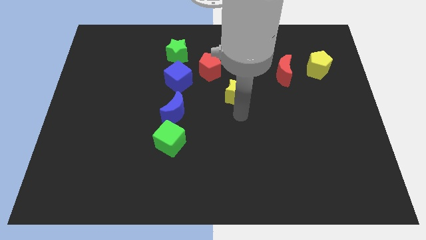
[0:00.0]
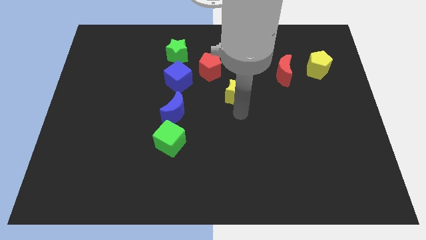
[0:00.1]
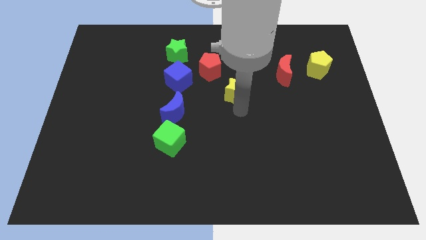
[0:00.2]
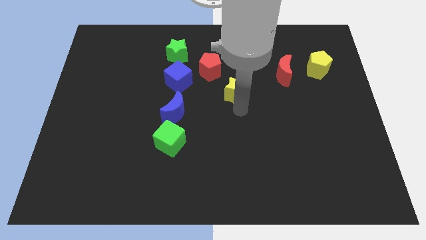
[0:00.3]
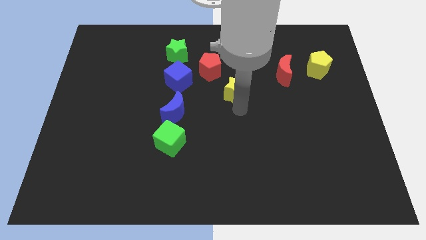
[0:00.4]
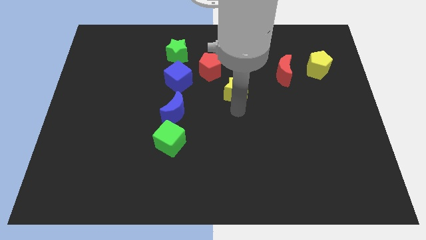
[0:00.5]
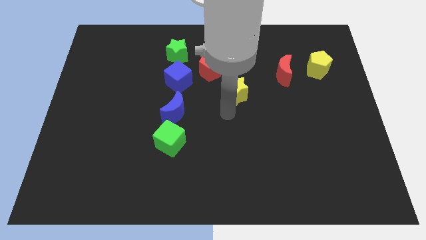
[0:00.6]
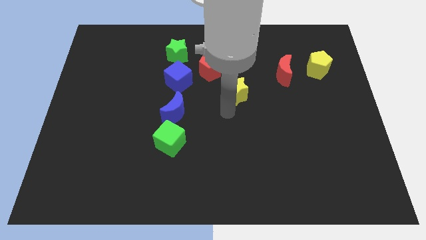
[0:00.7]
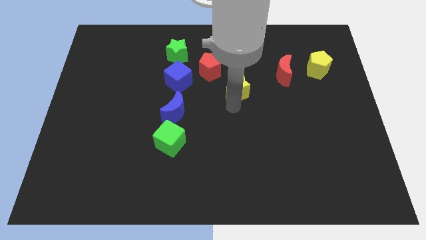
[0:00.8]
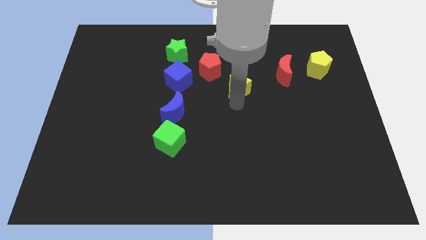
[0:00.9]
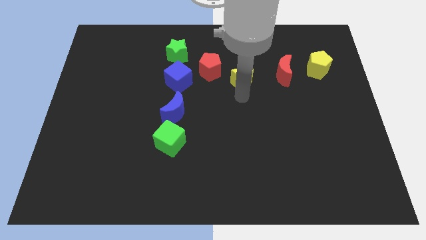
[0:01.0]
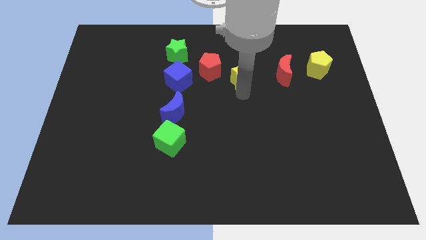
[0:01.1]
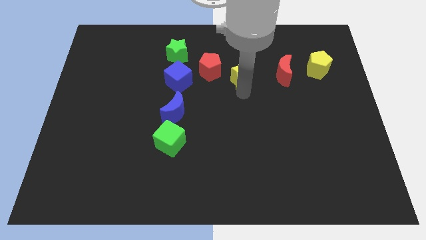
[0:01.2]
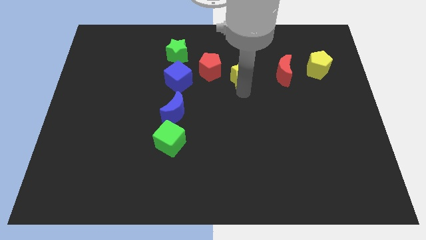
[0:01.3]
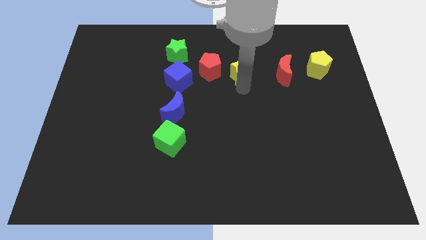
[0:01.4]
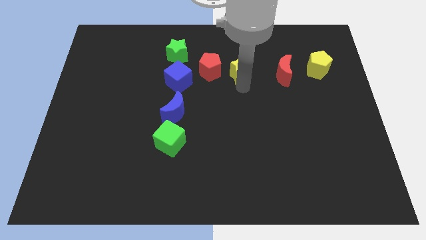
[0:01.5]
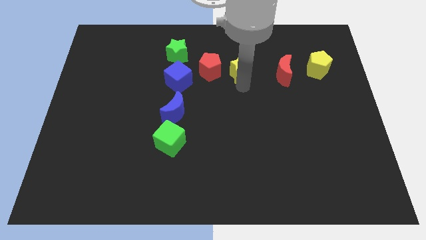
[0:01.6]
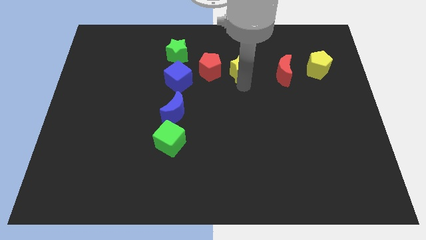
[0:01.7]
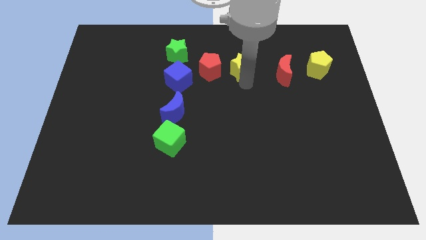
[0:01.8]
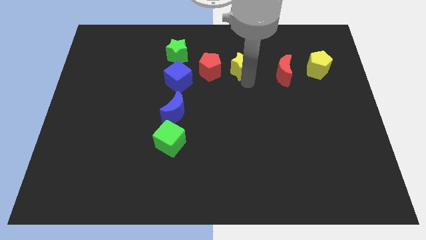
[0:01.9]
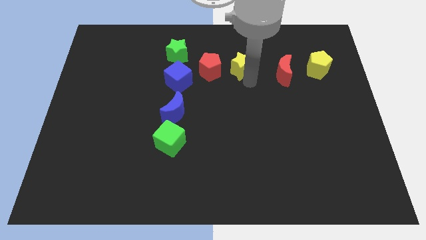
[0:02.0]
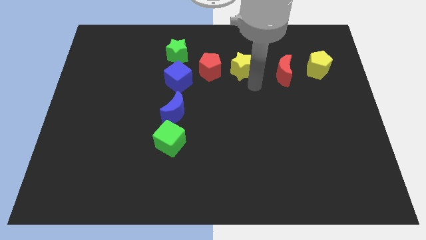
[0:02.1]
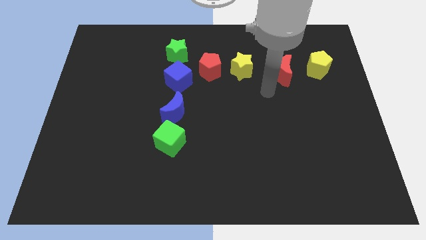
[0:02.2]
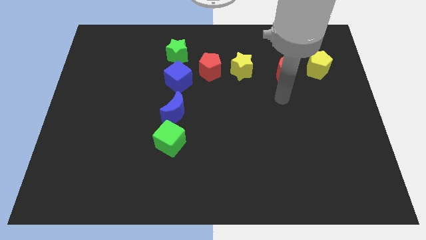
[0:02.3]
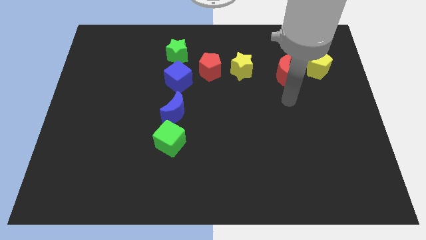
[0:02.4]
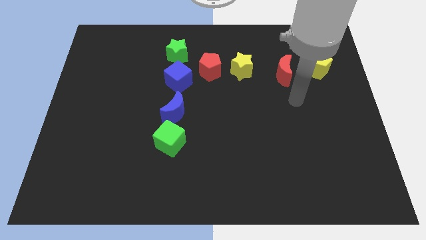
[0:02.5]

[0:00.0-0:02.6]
move the yellow star to the left of the red crescent

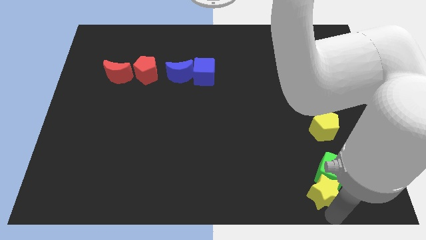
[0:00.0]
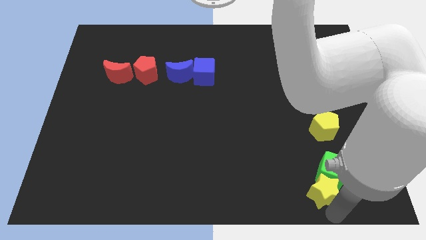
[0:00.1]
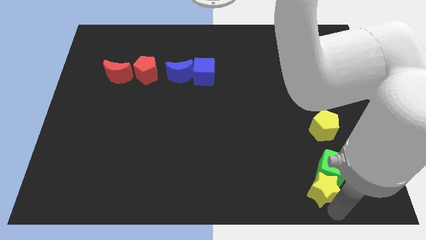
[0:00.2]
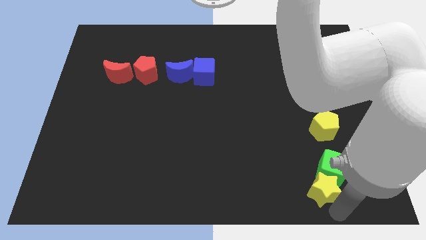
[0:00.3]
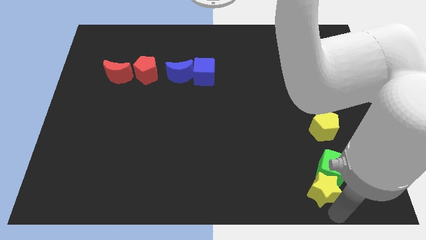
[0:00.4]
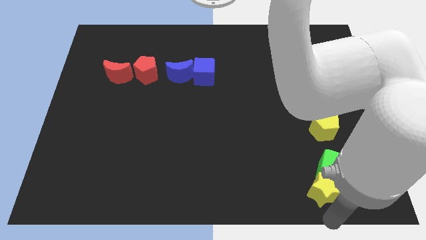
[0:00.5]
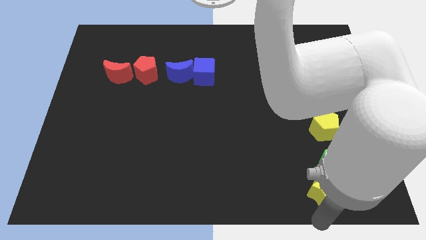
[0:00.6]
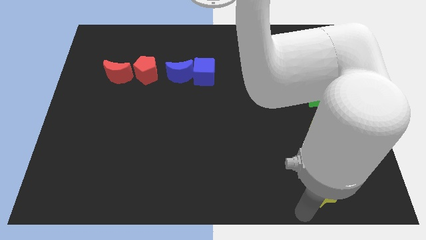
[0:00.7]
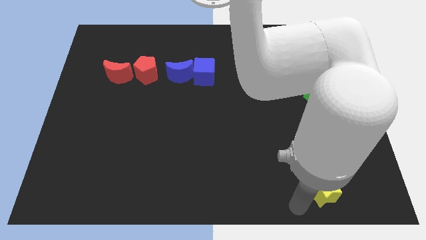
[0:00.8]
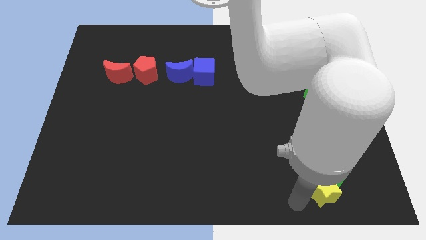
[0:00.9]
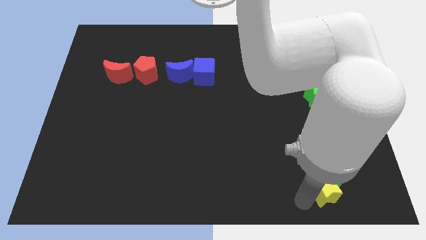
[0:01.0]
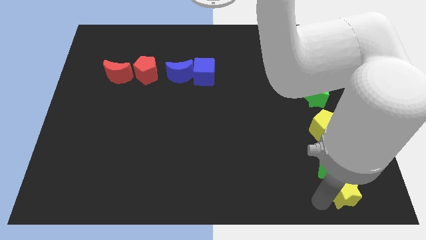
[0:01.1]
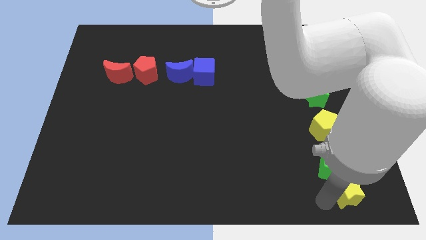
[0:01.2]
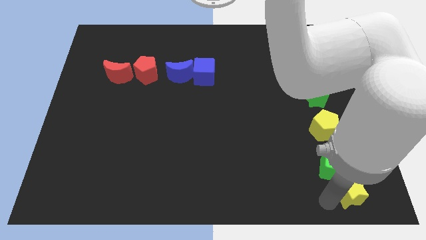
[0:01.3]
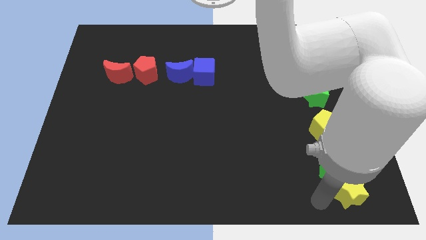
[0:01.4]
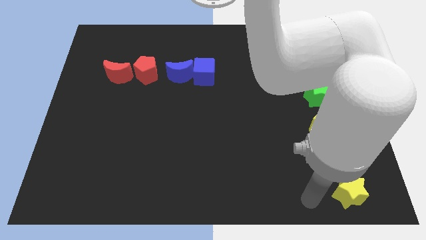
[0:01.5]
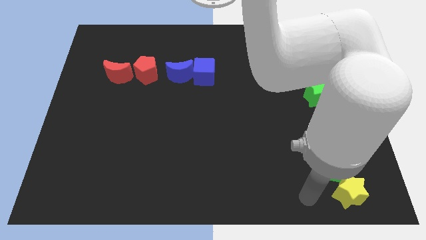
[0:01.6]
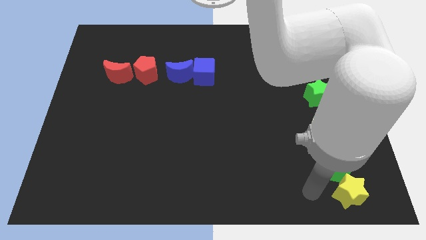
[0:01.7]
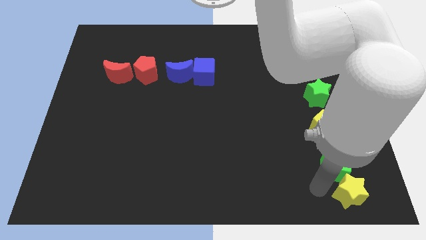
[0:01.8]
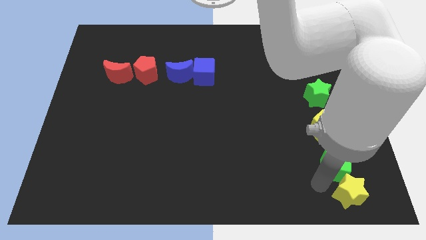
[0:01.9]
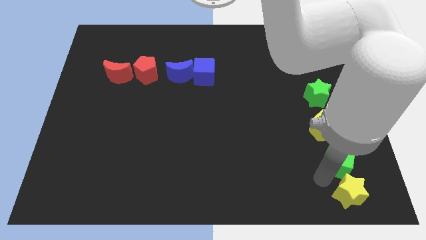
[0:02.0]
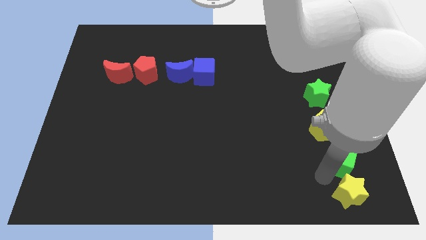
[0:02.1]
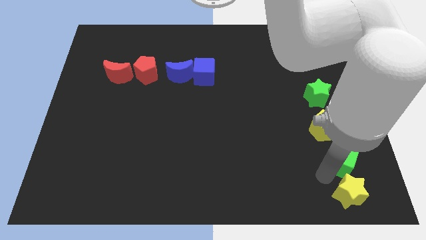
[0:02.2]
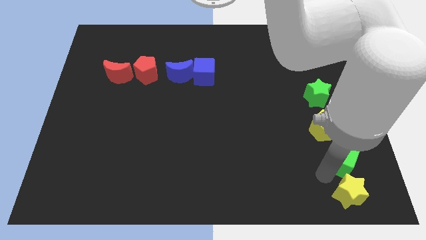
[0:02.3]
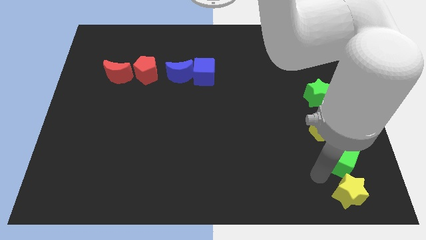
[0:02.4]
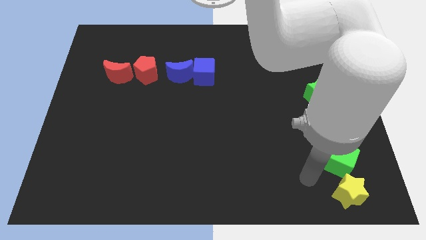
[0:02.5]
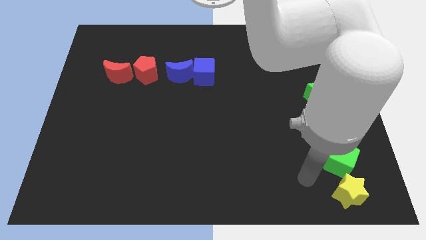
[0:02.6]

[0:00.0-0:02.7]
push the yellow star towards the bottom right corner of the board

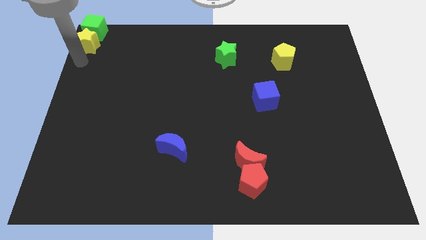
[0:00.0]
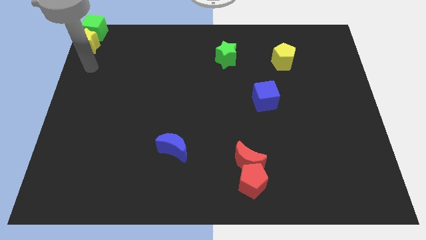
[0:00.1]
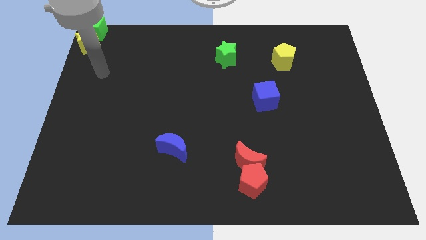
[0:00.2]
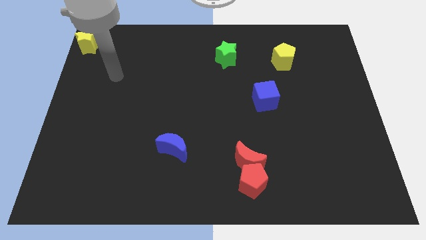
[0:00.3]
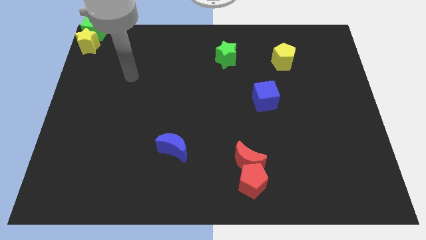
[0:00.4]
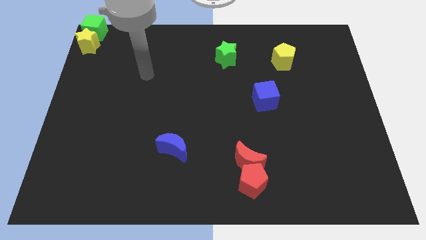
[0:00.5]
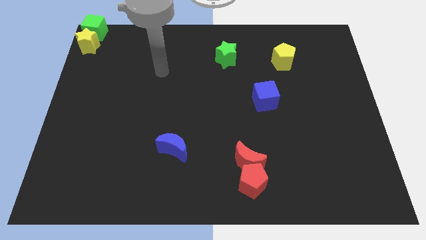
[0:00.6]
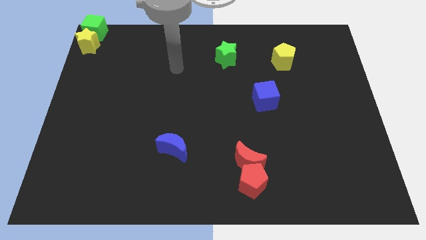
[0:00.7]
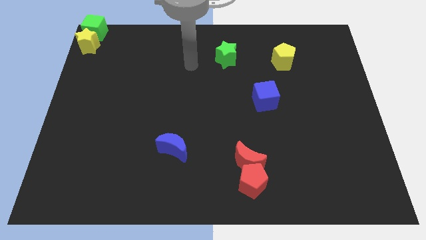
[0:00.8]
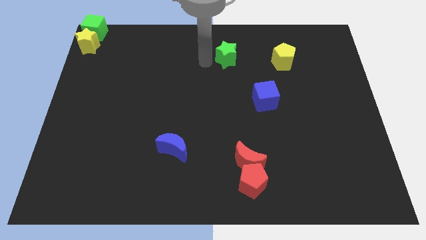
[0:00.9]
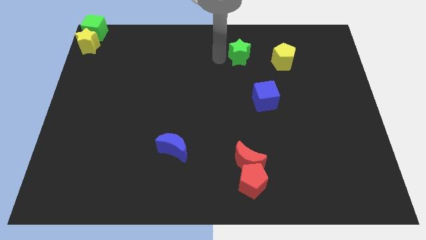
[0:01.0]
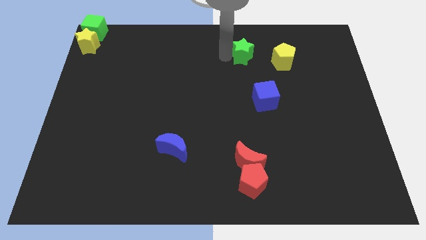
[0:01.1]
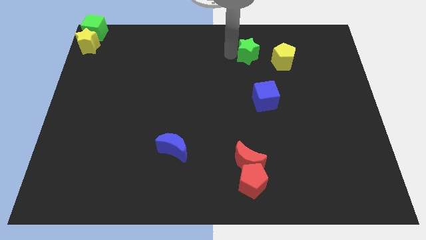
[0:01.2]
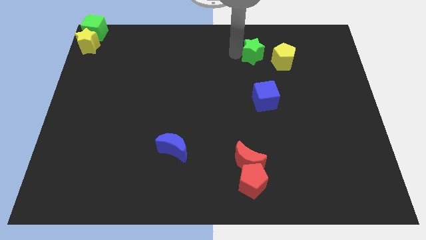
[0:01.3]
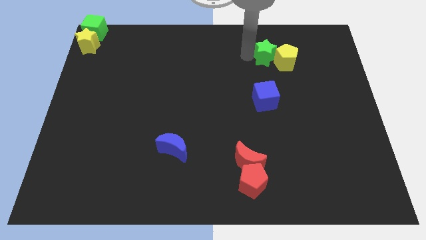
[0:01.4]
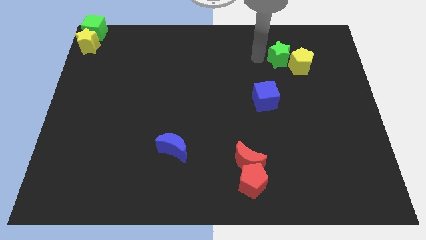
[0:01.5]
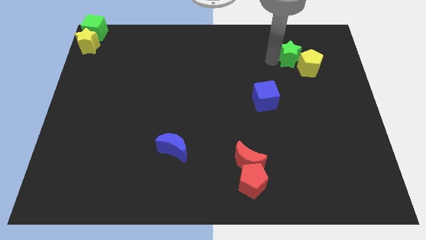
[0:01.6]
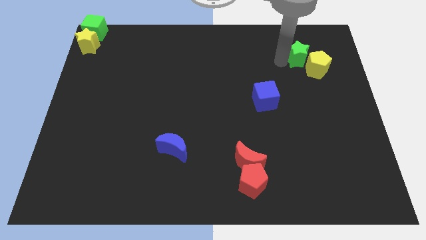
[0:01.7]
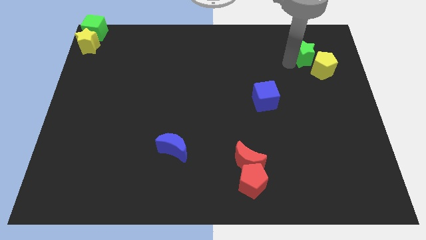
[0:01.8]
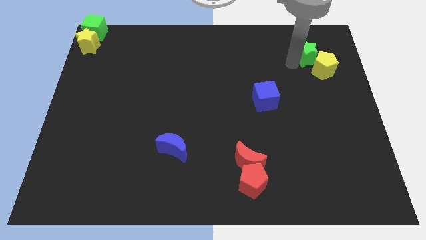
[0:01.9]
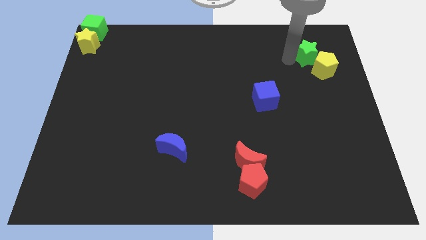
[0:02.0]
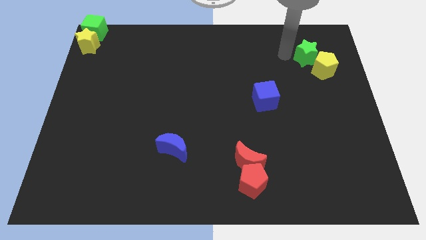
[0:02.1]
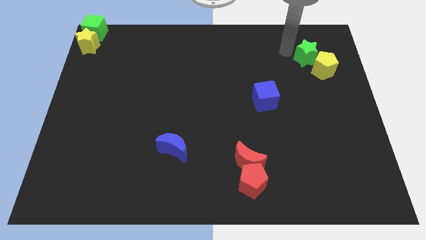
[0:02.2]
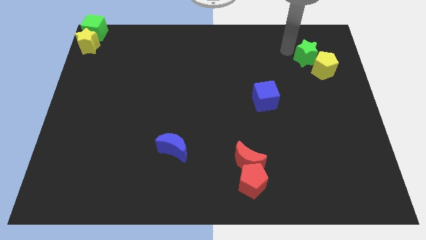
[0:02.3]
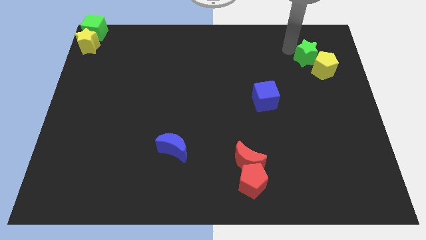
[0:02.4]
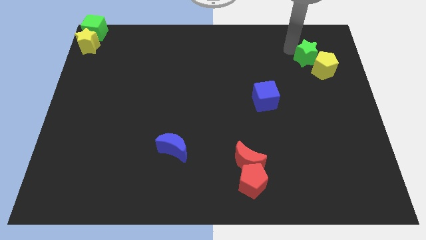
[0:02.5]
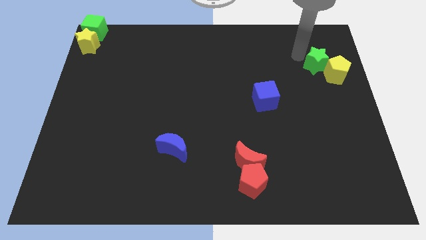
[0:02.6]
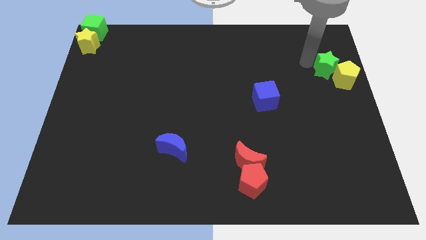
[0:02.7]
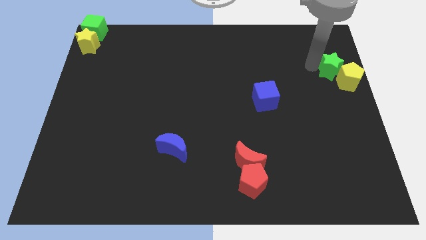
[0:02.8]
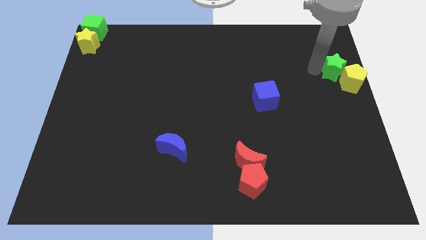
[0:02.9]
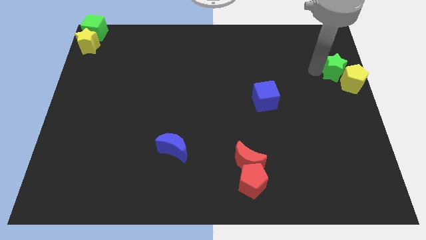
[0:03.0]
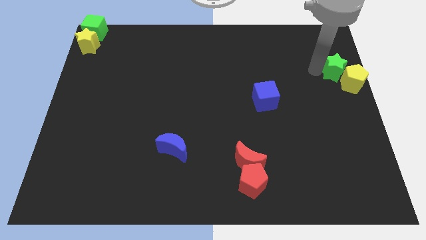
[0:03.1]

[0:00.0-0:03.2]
push the green star and yellow pentagon towards the right side of the board

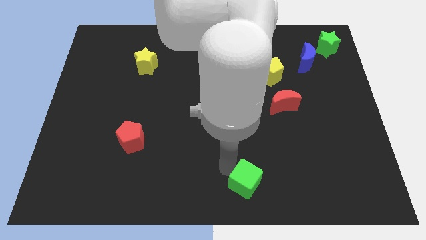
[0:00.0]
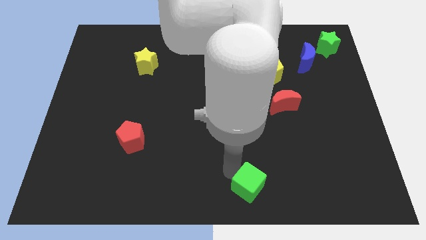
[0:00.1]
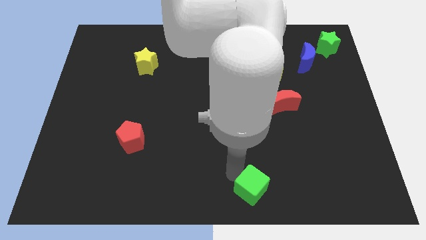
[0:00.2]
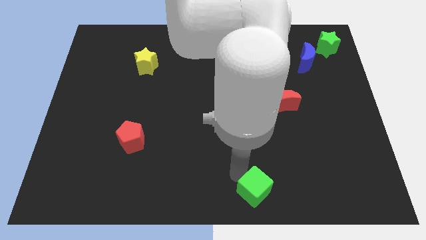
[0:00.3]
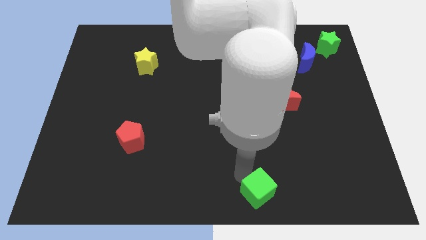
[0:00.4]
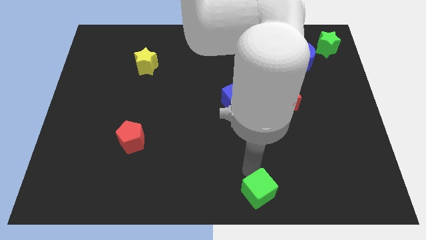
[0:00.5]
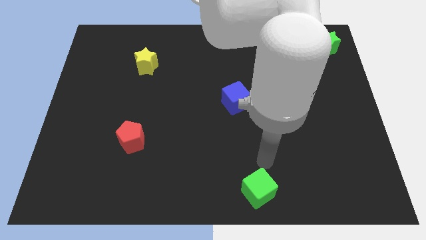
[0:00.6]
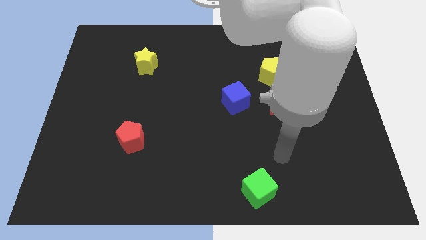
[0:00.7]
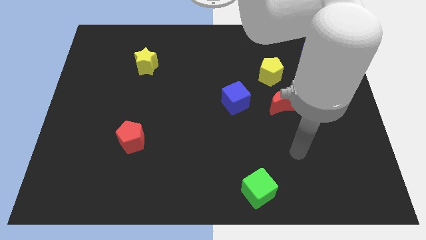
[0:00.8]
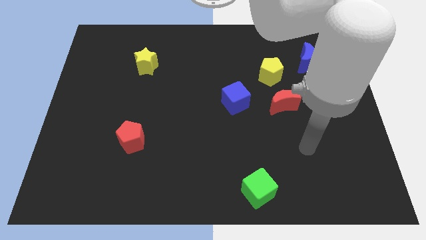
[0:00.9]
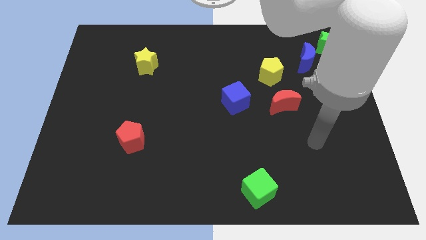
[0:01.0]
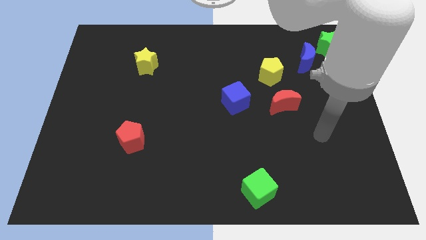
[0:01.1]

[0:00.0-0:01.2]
move the green cube to the right of the board
